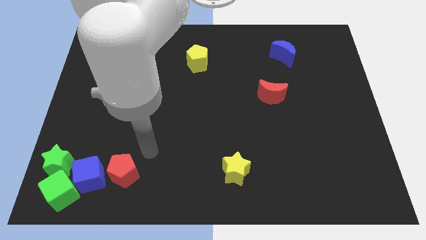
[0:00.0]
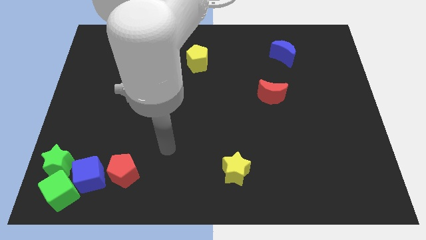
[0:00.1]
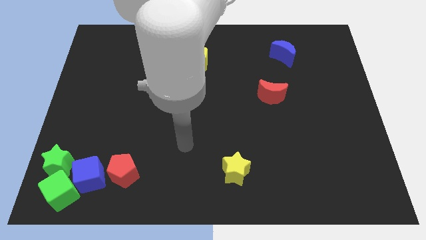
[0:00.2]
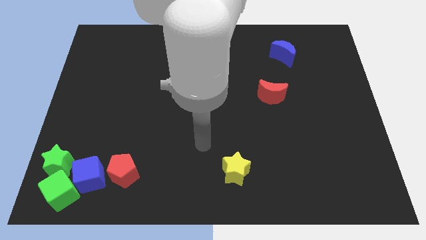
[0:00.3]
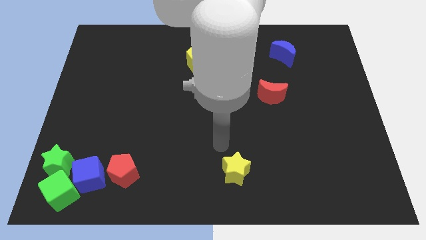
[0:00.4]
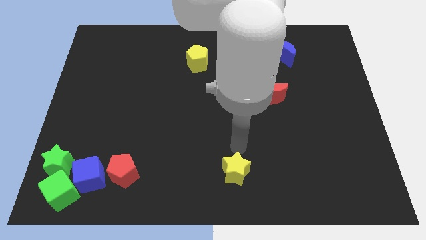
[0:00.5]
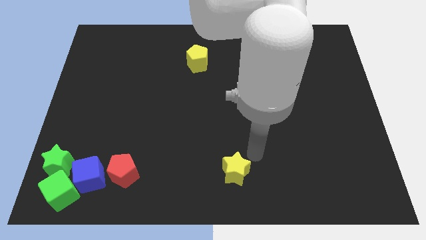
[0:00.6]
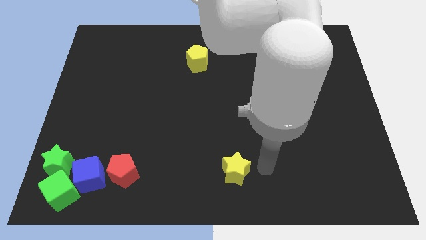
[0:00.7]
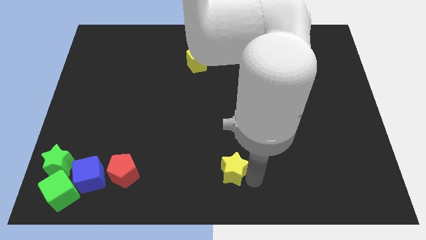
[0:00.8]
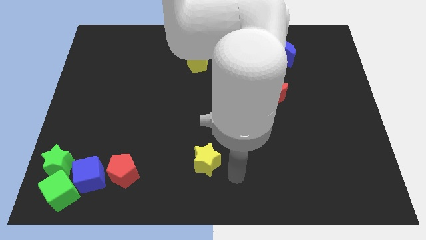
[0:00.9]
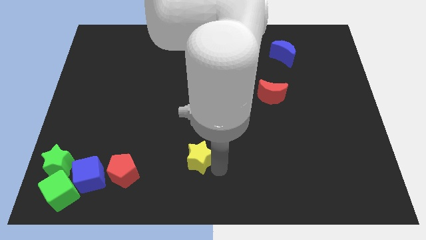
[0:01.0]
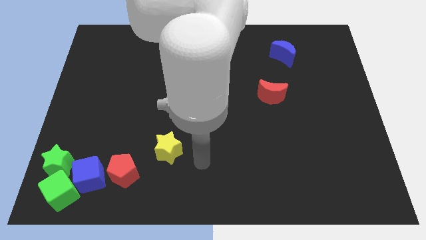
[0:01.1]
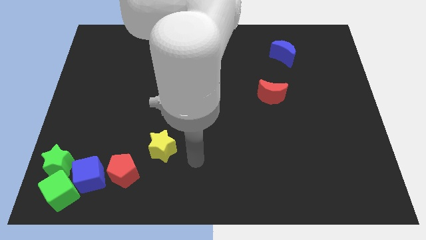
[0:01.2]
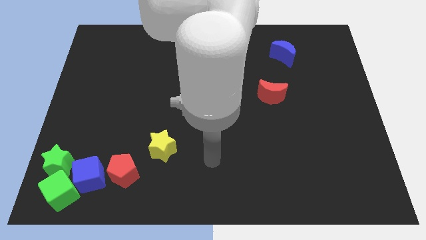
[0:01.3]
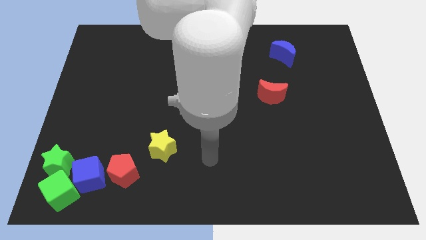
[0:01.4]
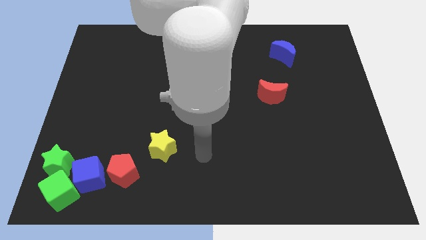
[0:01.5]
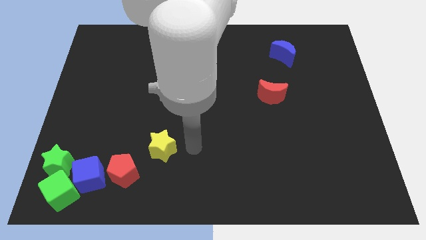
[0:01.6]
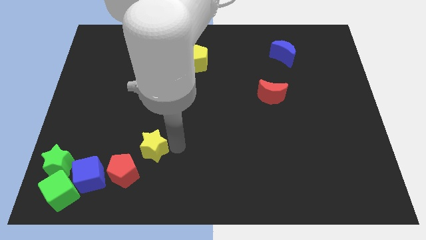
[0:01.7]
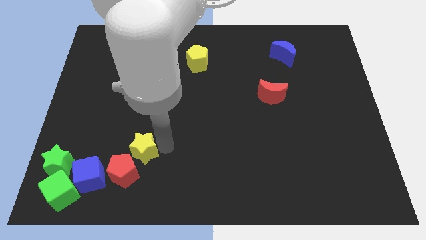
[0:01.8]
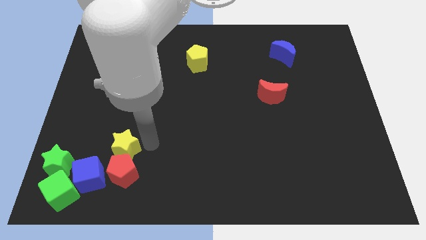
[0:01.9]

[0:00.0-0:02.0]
push the yellow star on the top of the red pentagon

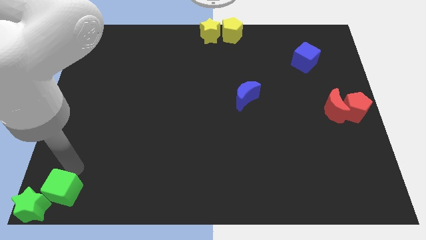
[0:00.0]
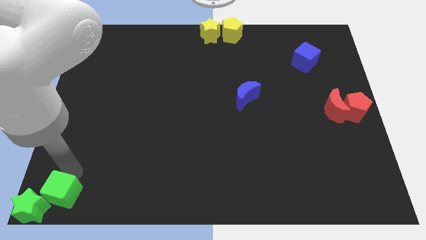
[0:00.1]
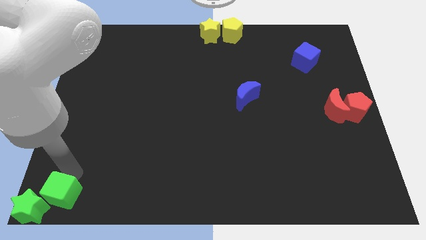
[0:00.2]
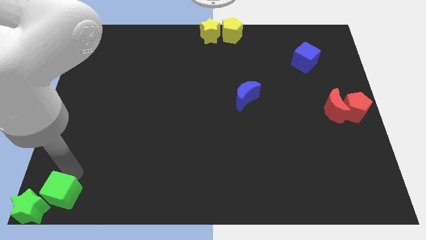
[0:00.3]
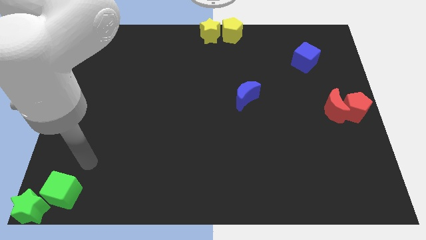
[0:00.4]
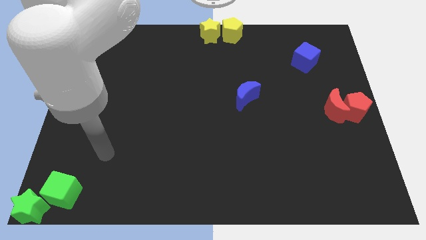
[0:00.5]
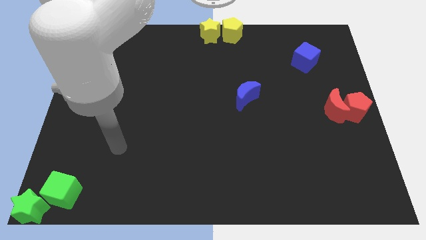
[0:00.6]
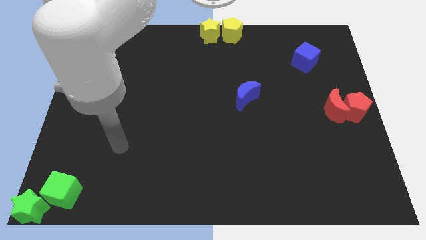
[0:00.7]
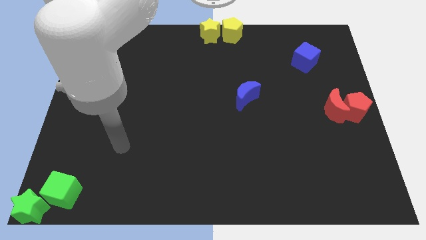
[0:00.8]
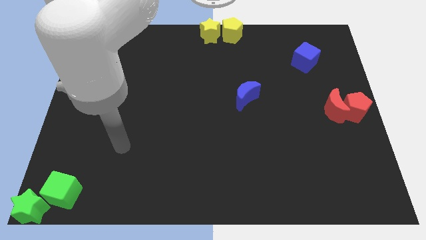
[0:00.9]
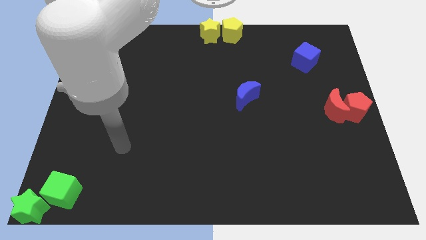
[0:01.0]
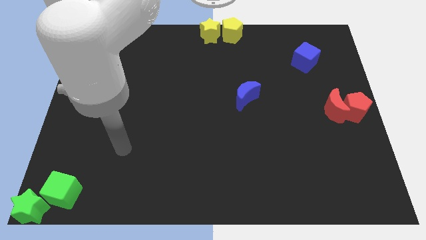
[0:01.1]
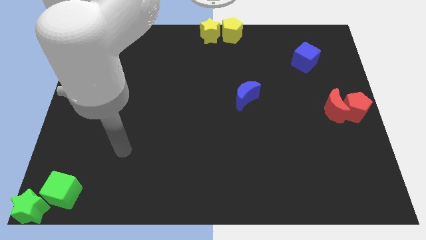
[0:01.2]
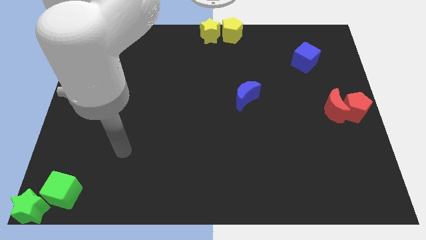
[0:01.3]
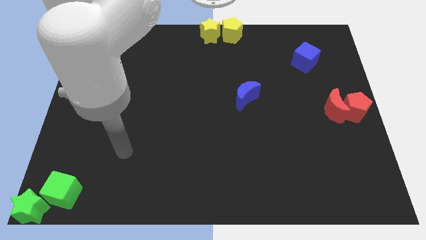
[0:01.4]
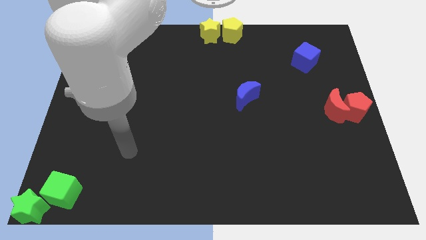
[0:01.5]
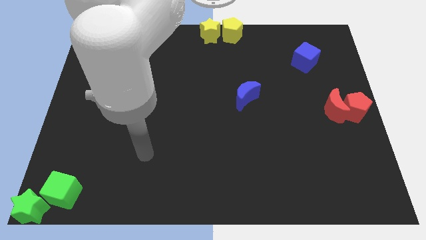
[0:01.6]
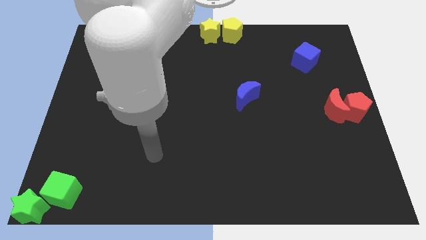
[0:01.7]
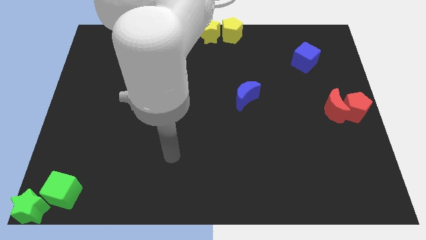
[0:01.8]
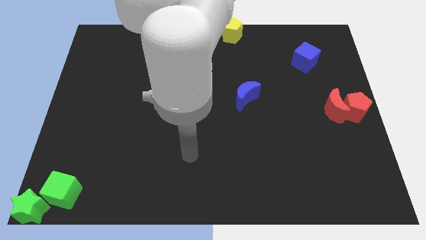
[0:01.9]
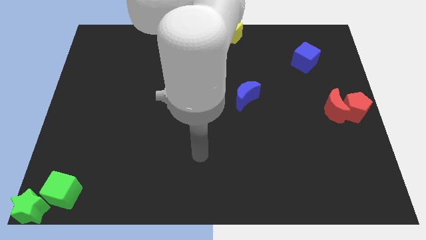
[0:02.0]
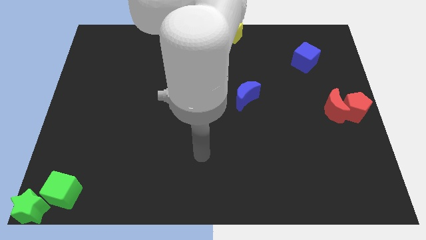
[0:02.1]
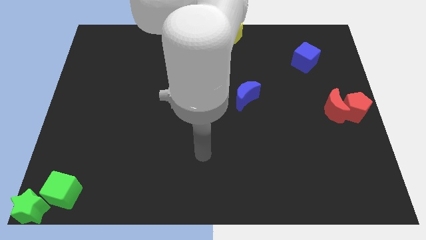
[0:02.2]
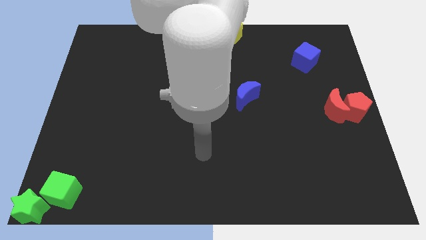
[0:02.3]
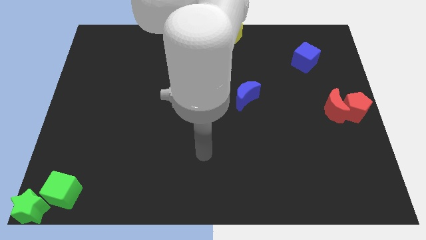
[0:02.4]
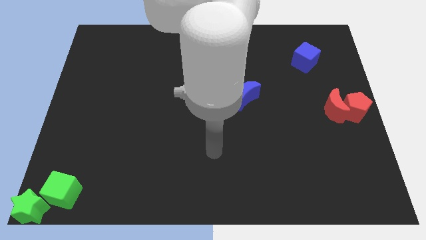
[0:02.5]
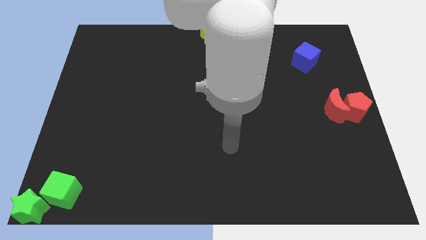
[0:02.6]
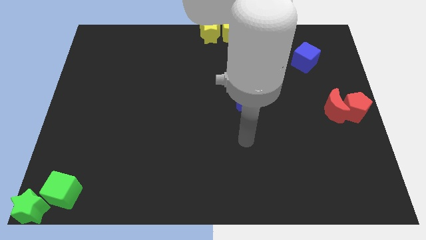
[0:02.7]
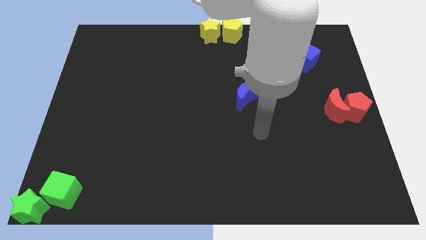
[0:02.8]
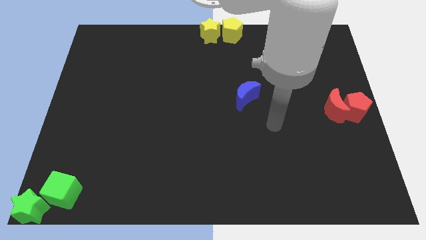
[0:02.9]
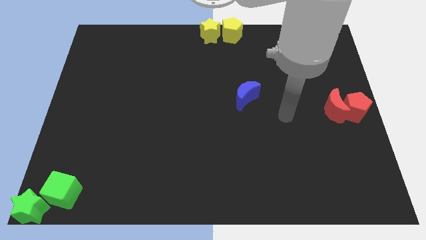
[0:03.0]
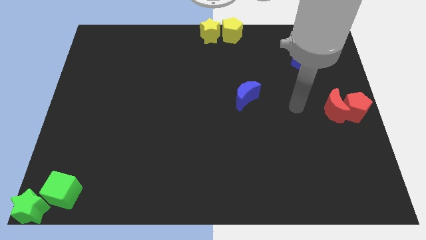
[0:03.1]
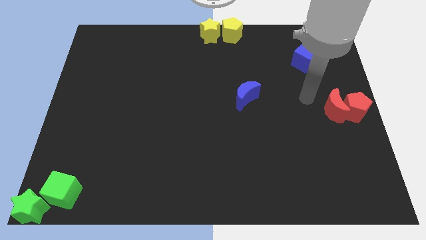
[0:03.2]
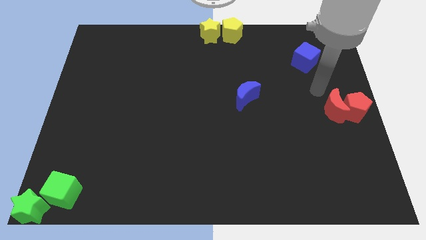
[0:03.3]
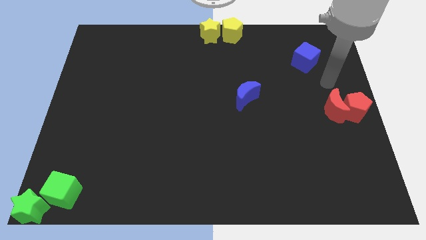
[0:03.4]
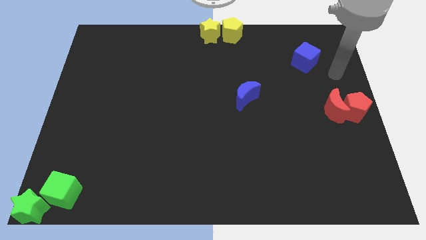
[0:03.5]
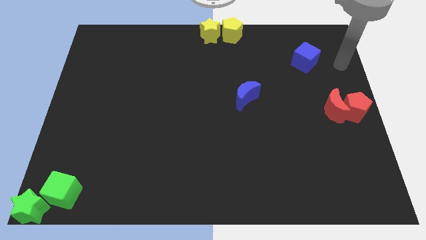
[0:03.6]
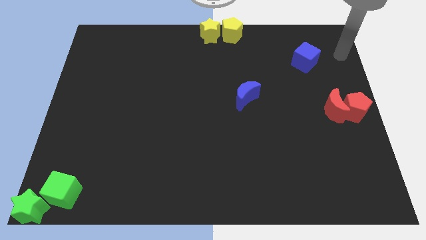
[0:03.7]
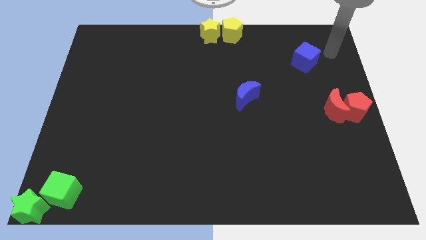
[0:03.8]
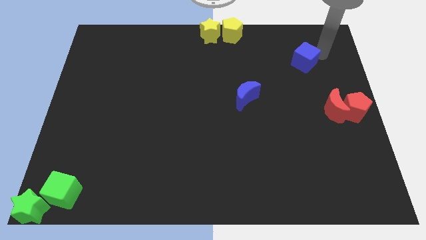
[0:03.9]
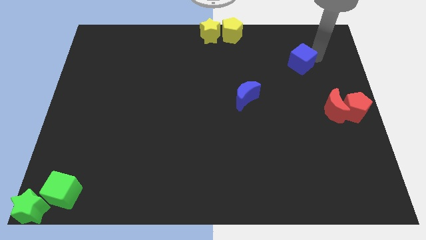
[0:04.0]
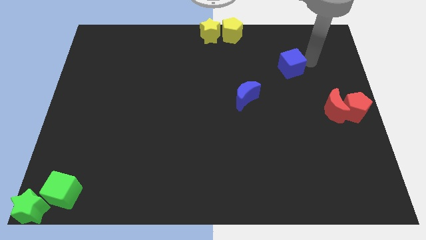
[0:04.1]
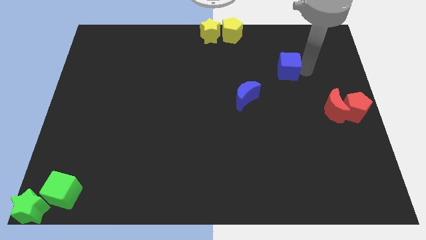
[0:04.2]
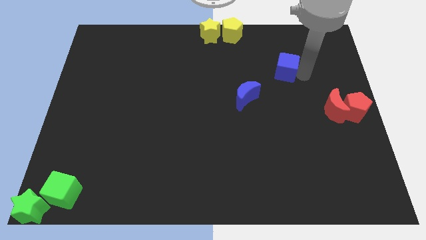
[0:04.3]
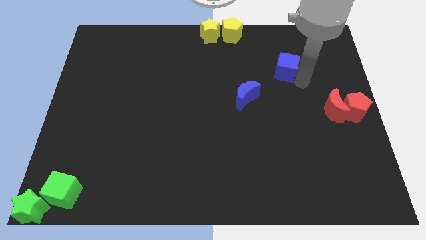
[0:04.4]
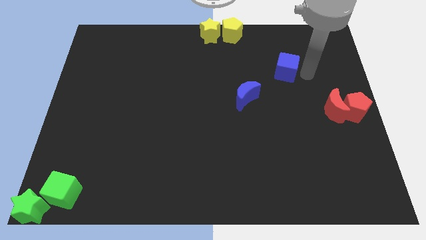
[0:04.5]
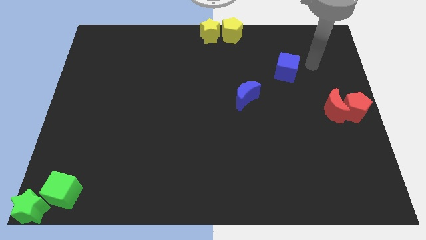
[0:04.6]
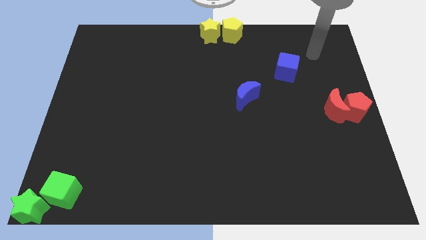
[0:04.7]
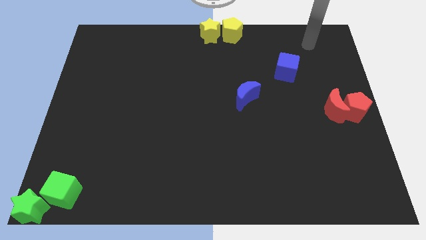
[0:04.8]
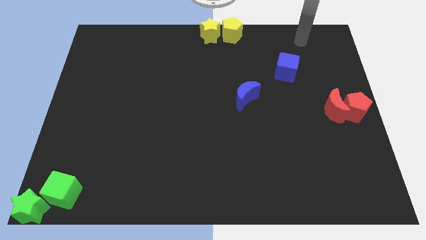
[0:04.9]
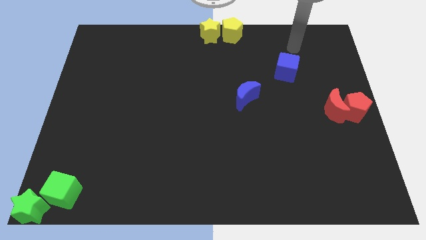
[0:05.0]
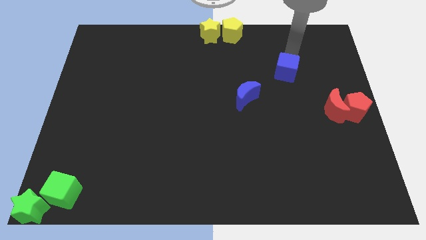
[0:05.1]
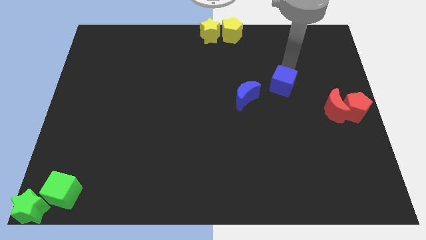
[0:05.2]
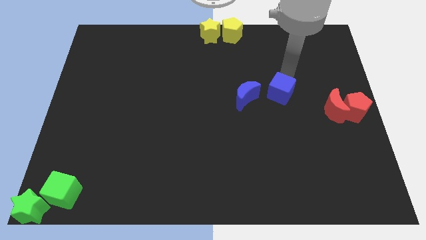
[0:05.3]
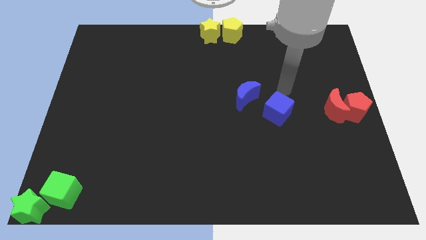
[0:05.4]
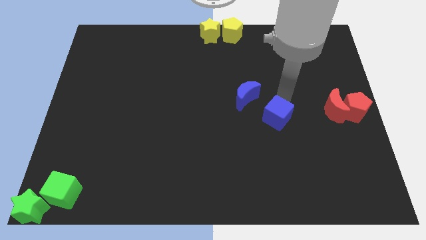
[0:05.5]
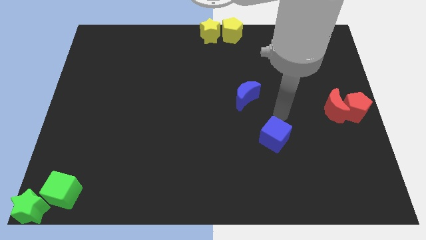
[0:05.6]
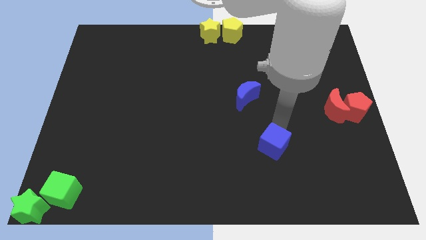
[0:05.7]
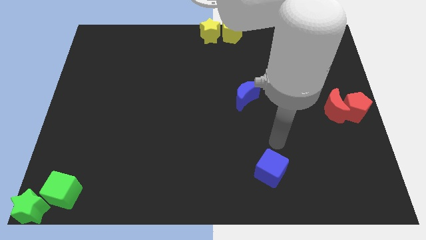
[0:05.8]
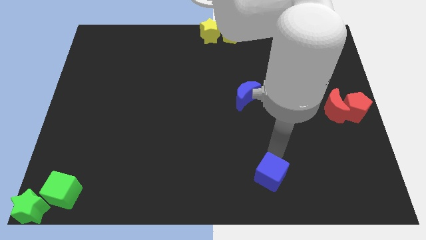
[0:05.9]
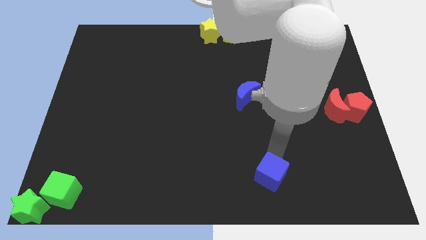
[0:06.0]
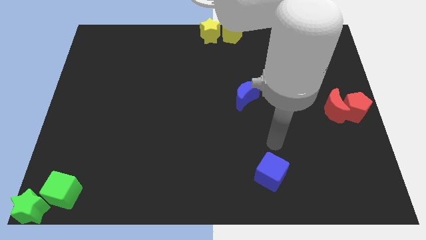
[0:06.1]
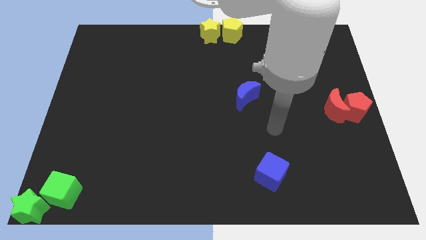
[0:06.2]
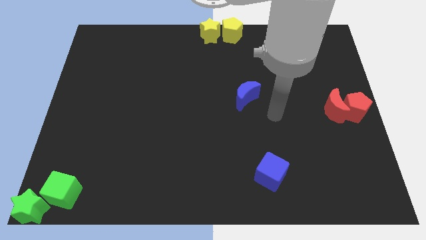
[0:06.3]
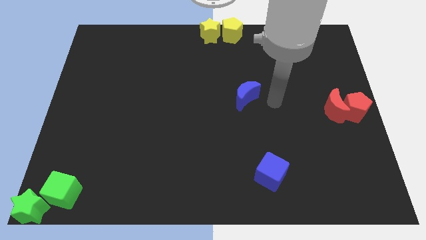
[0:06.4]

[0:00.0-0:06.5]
place the blue cube to the right of the green cube

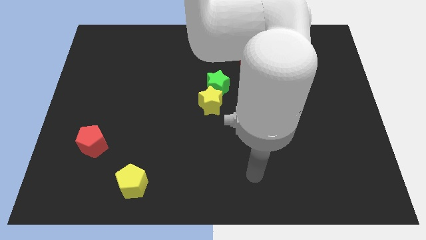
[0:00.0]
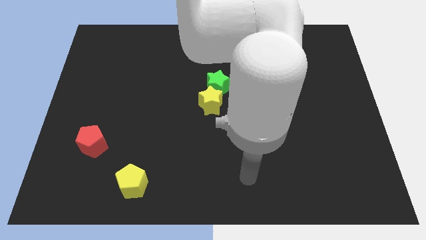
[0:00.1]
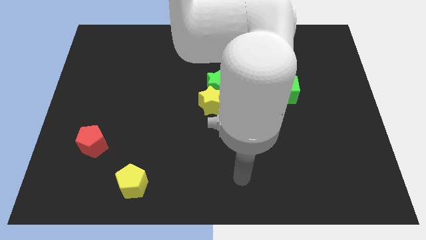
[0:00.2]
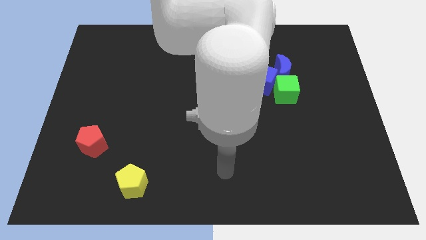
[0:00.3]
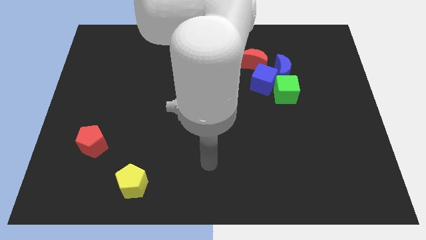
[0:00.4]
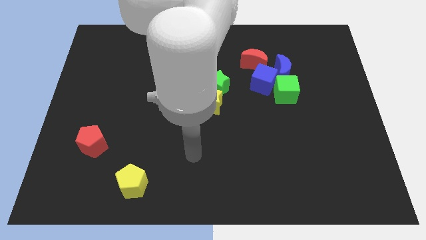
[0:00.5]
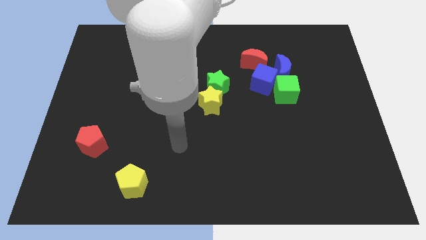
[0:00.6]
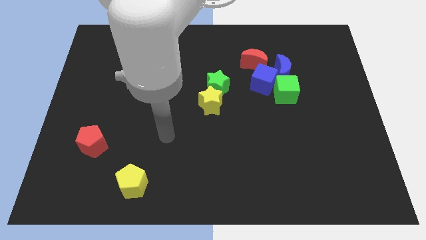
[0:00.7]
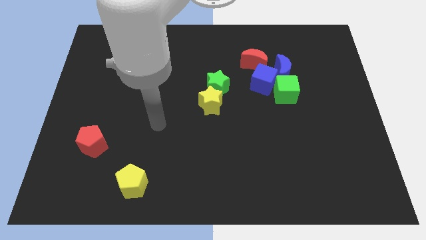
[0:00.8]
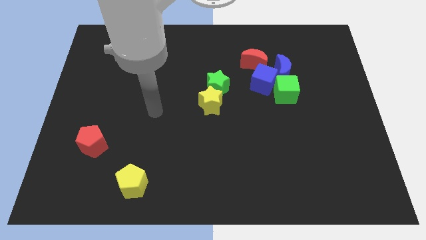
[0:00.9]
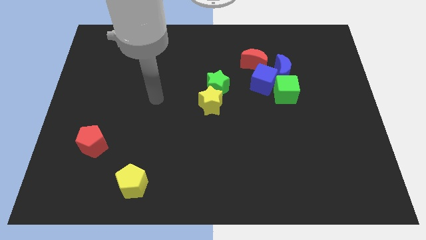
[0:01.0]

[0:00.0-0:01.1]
place arm on the left side of yellow star
